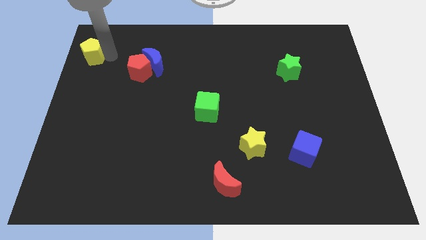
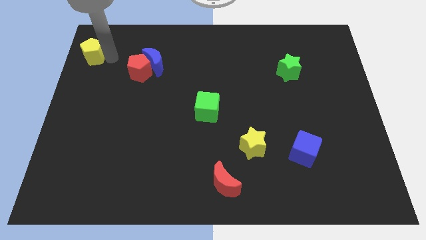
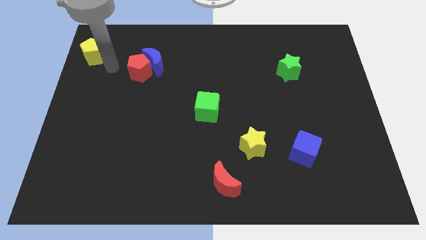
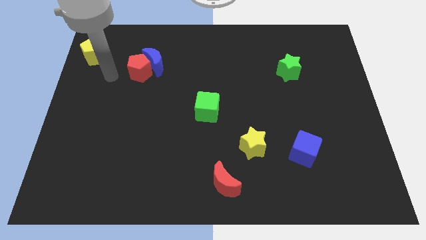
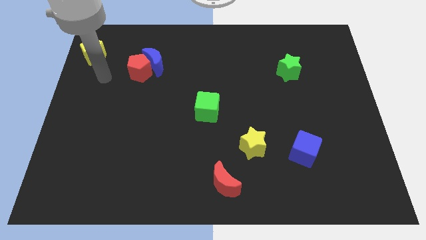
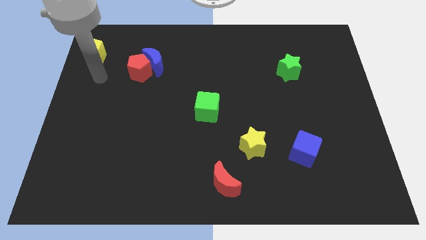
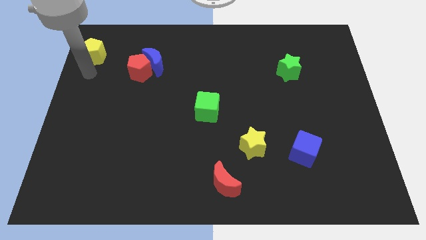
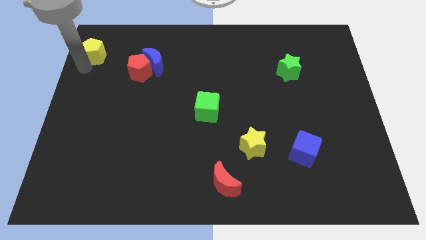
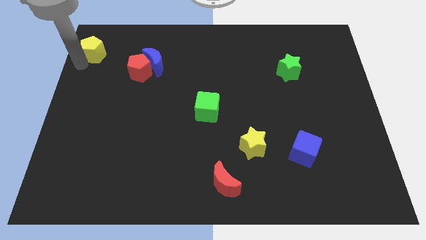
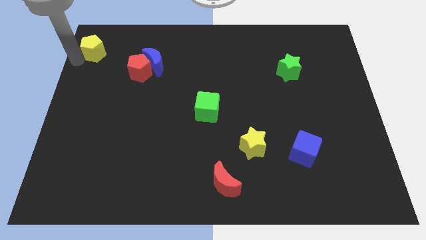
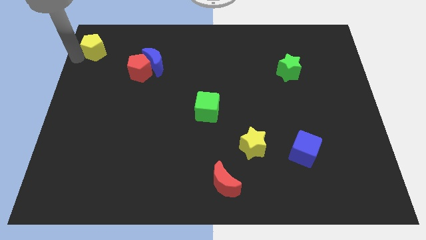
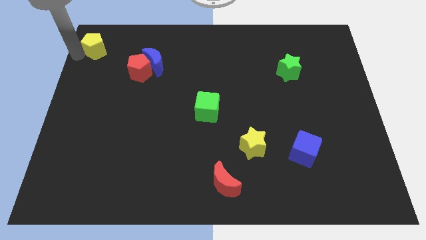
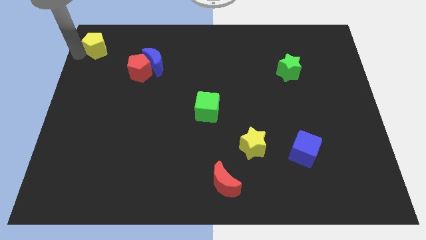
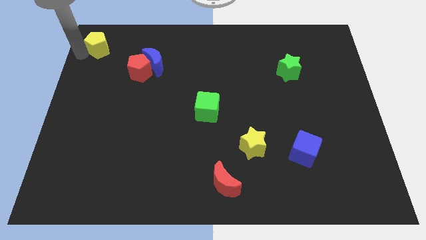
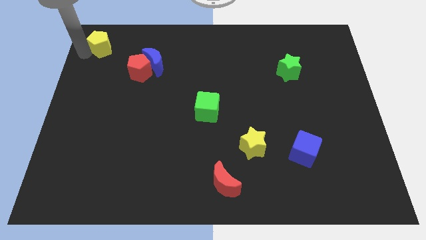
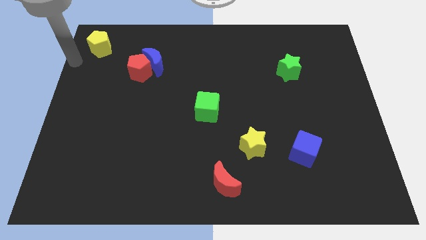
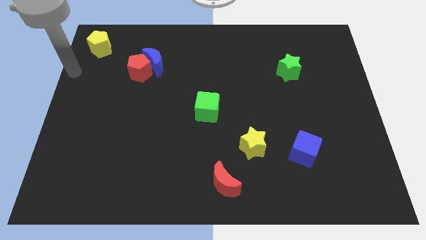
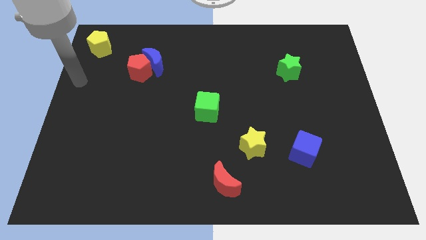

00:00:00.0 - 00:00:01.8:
move yellow pentagon towards the top left

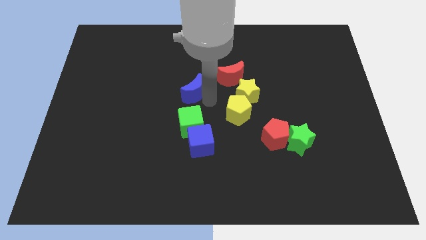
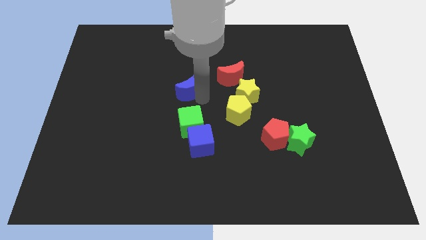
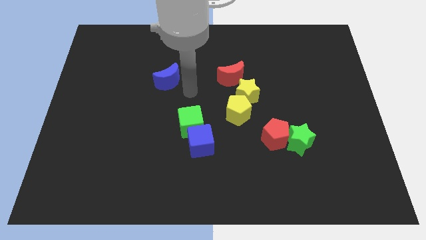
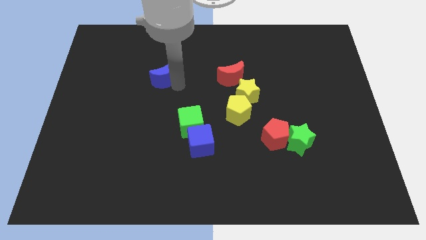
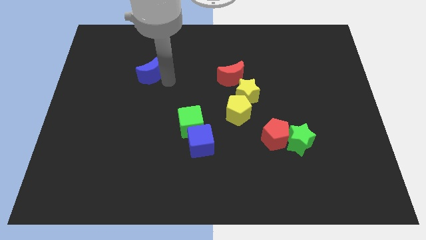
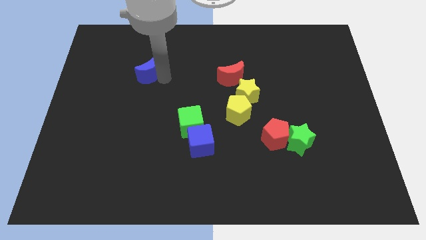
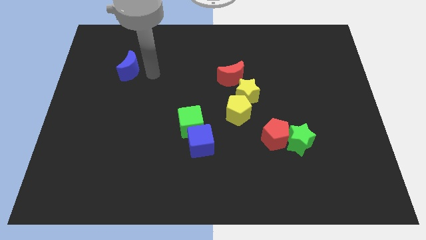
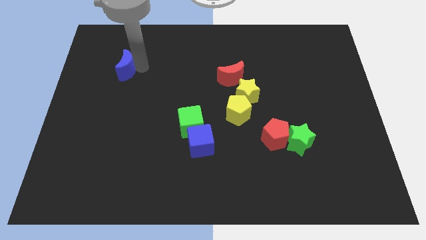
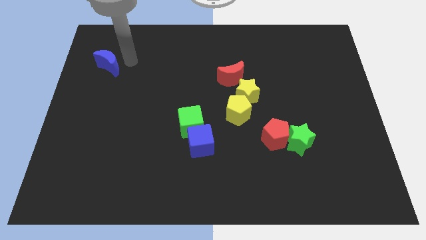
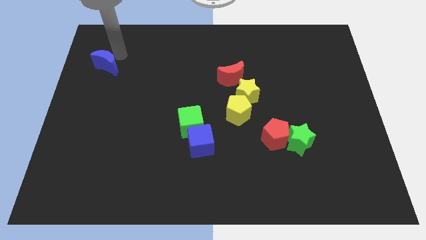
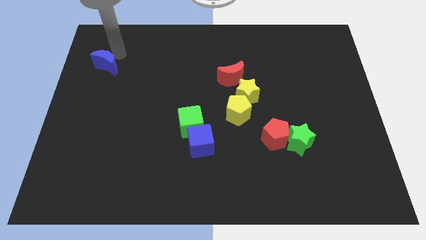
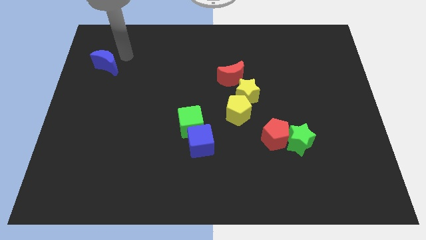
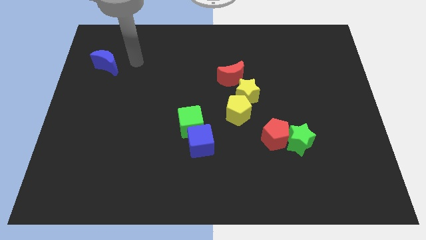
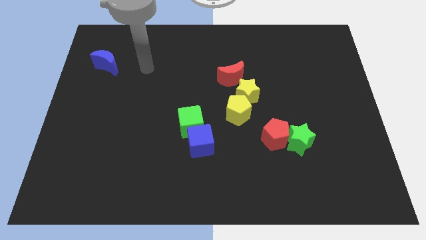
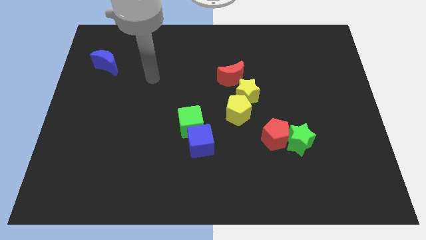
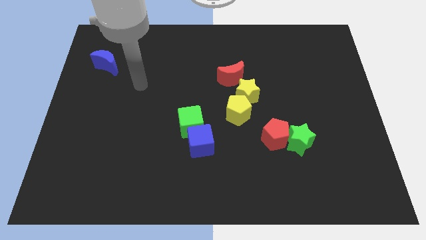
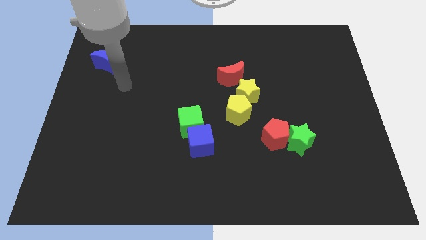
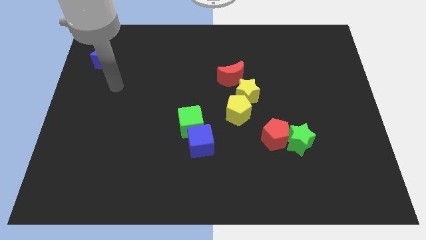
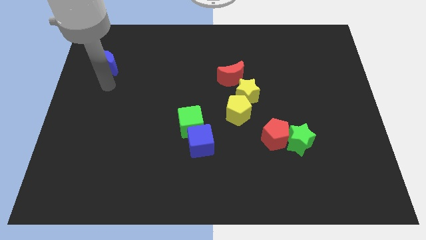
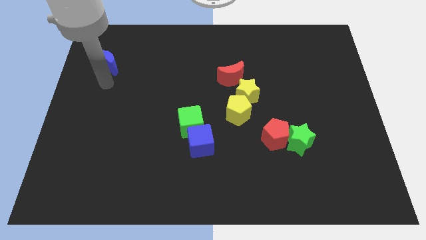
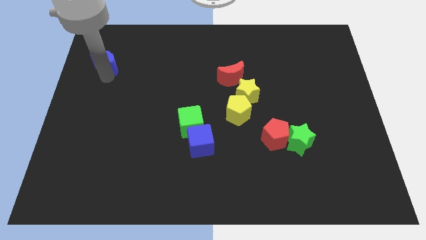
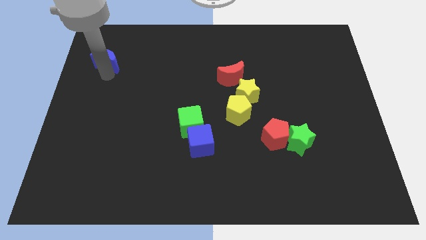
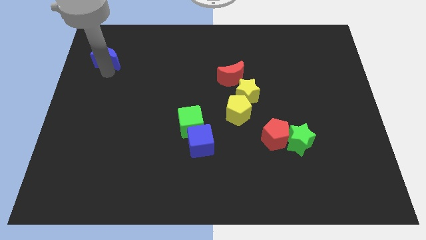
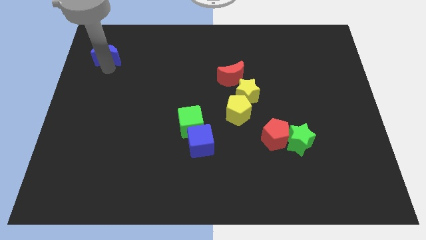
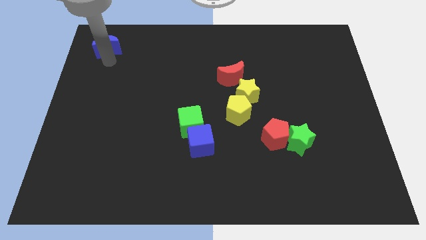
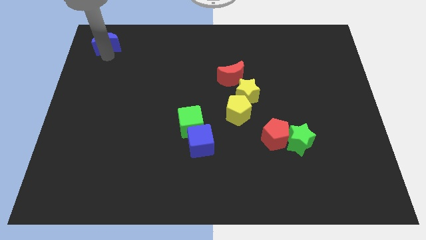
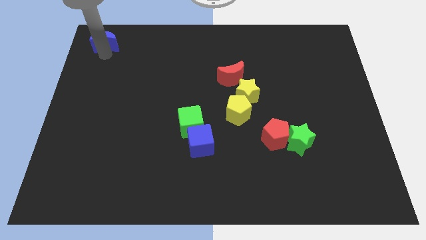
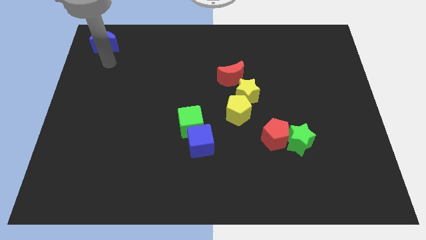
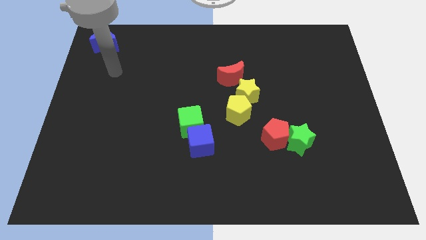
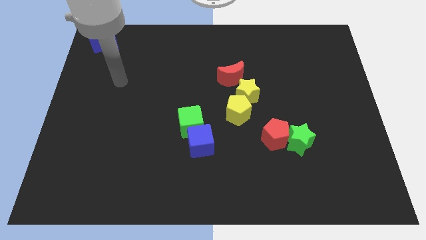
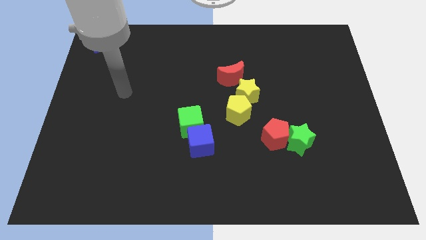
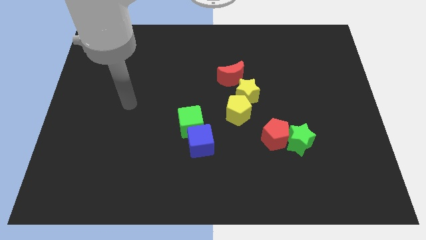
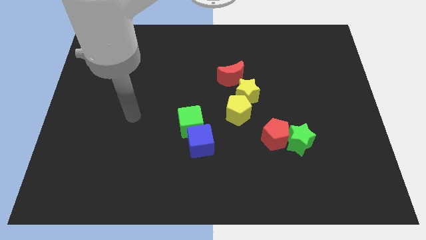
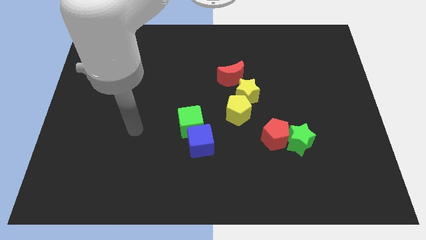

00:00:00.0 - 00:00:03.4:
move the blue crescent to the top left on the board

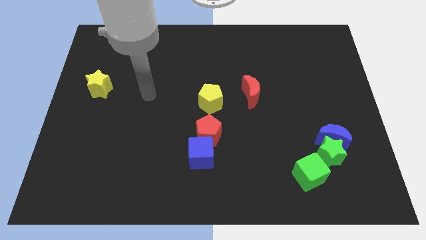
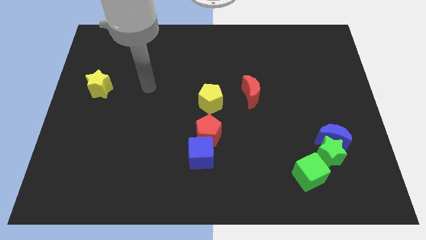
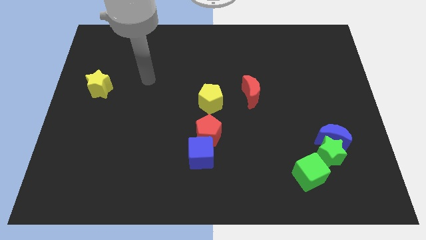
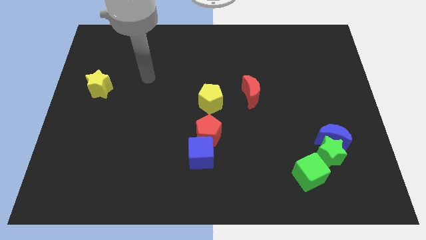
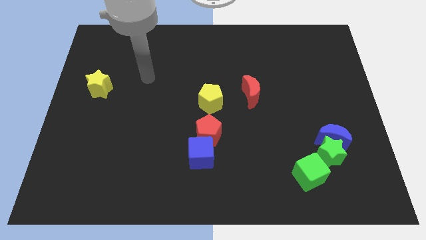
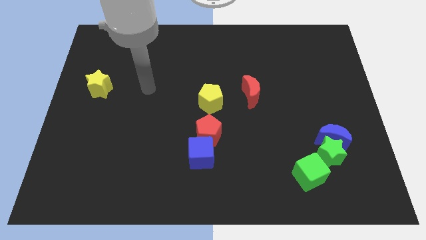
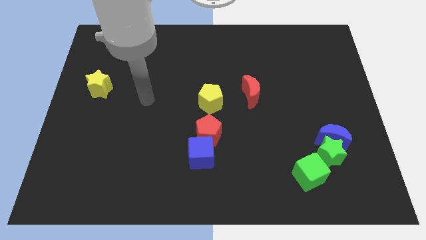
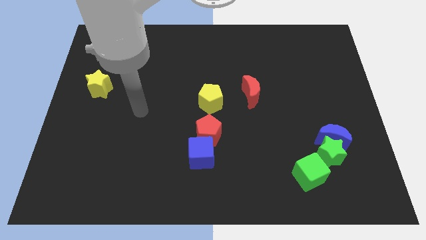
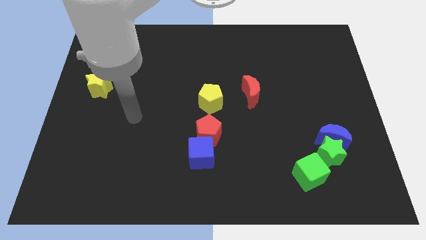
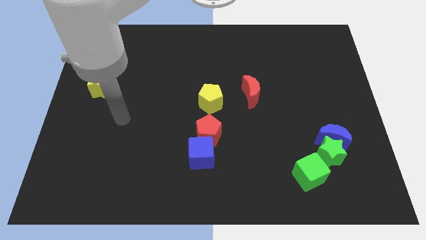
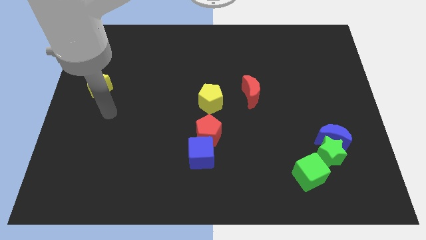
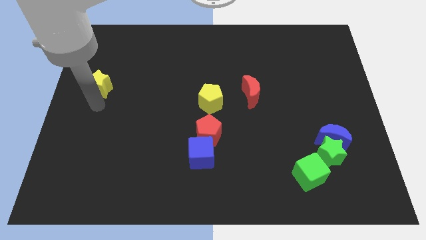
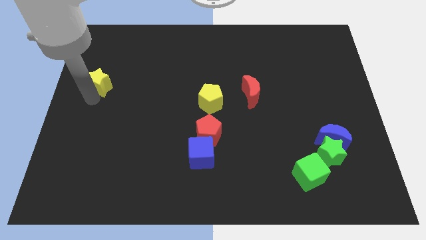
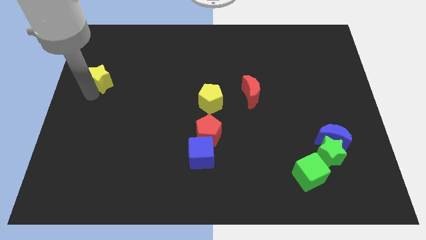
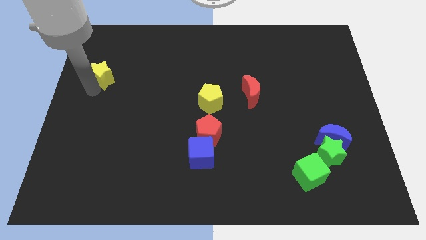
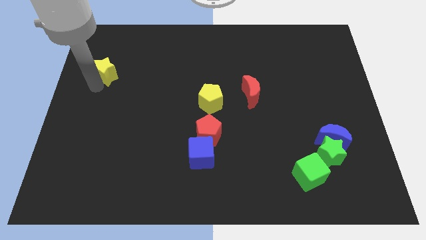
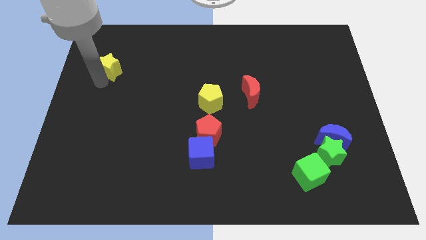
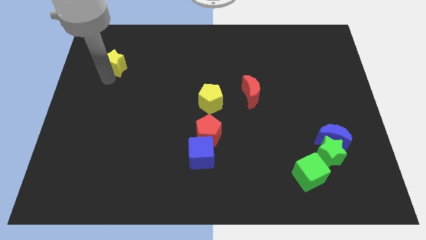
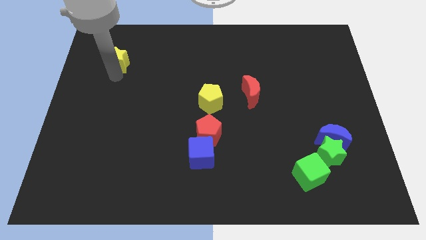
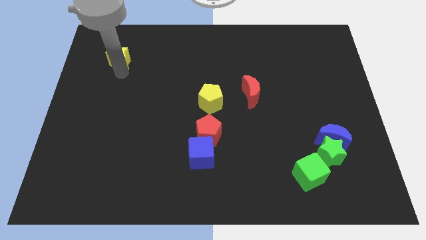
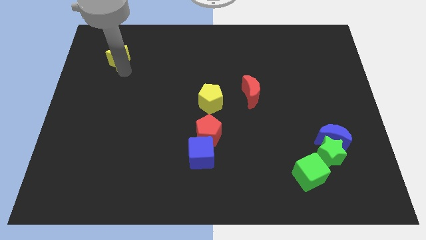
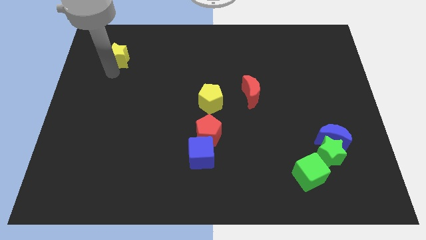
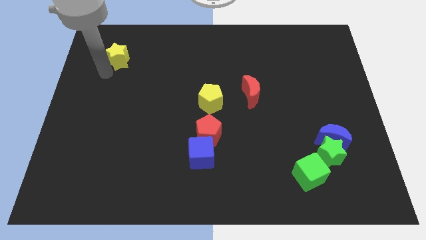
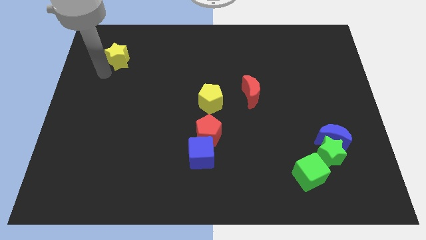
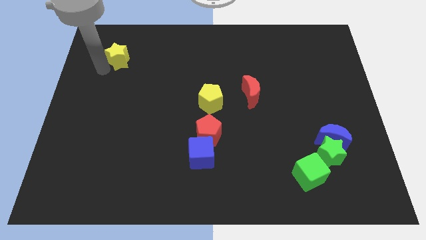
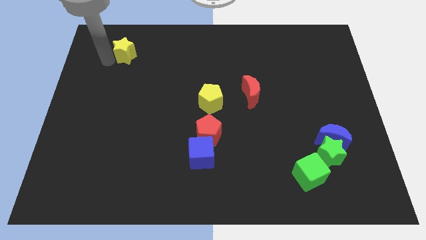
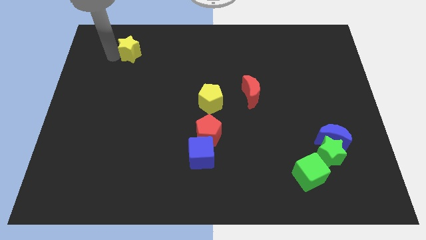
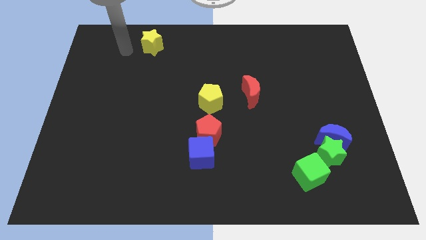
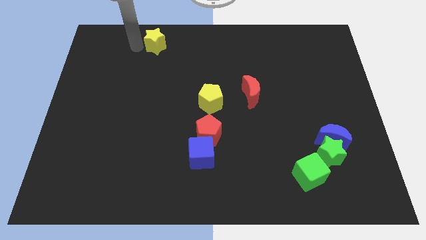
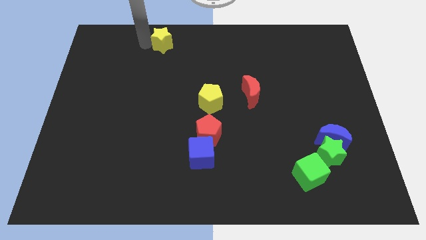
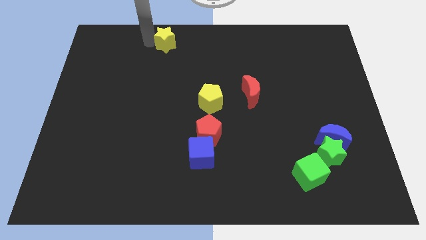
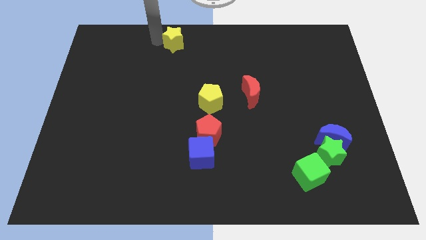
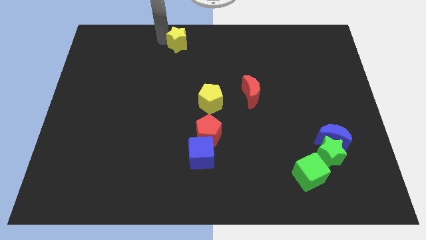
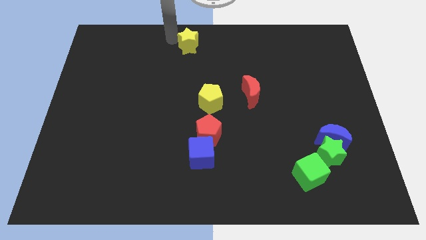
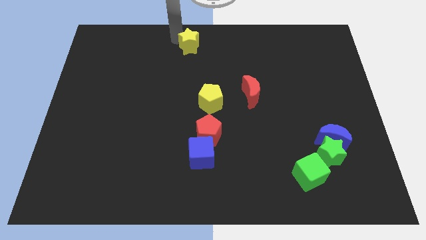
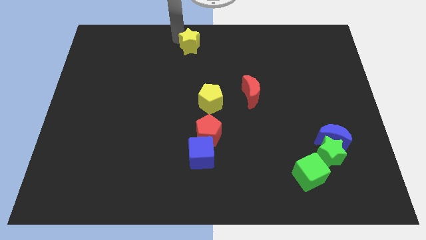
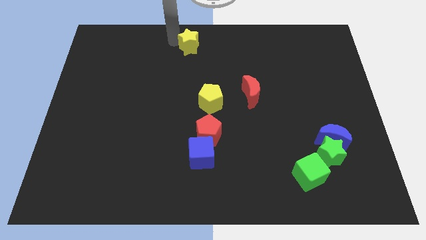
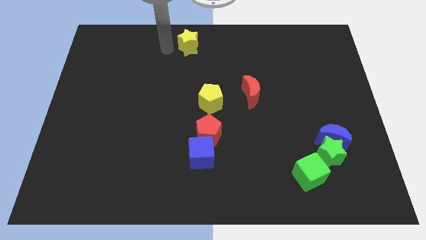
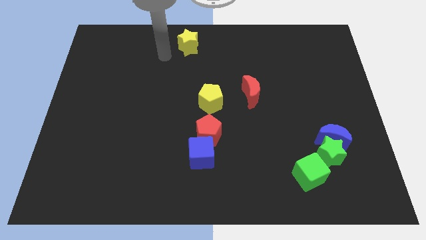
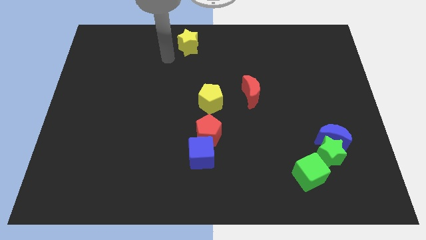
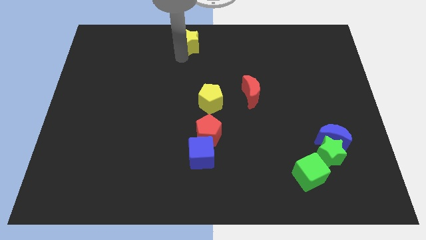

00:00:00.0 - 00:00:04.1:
push yellow star towards top center of the board
